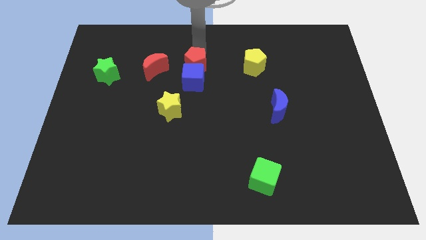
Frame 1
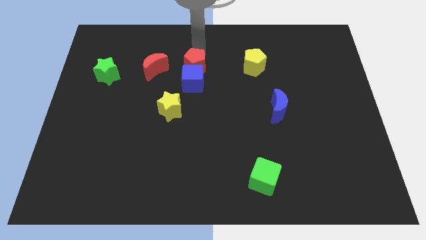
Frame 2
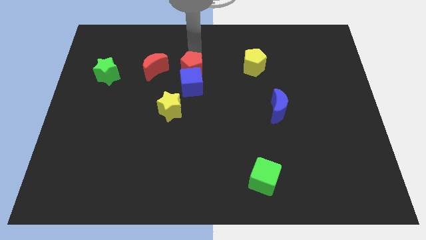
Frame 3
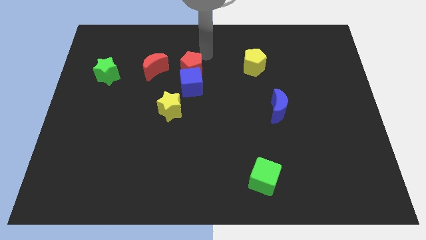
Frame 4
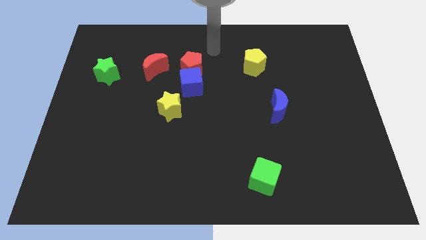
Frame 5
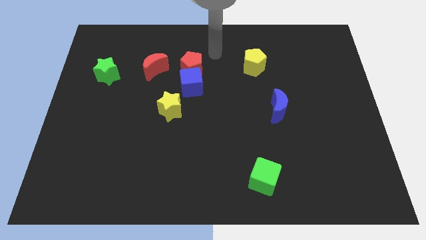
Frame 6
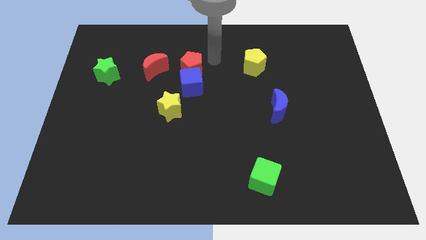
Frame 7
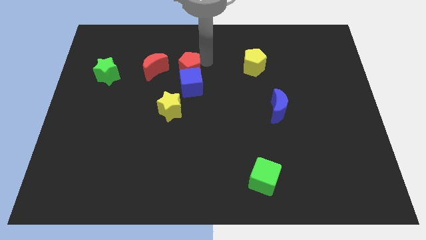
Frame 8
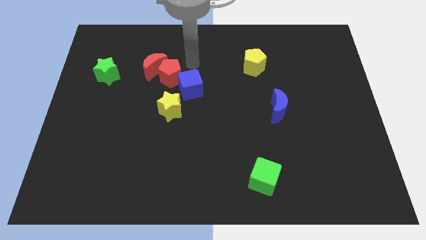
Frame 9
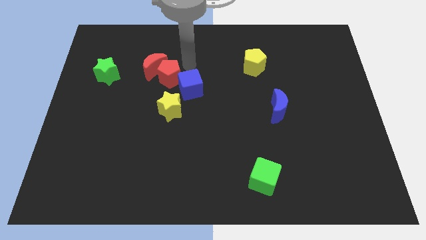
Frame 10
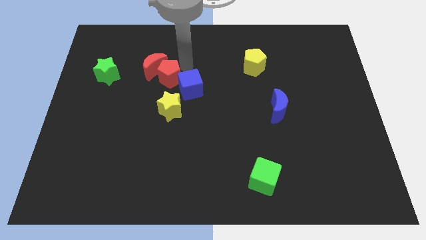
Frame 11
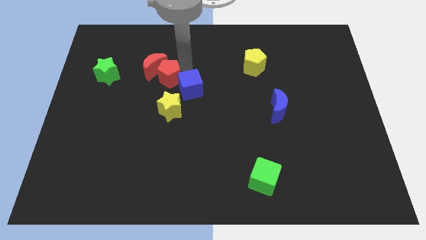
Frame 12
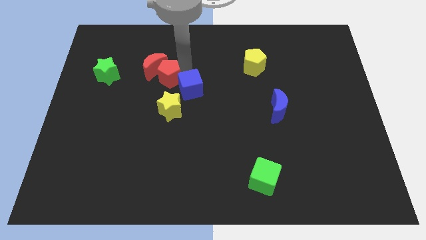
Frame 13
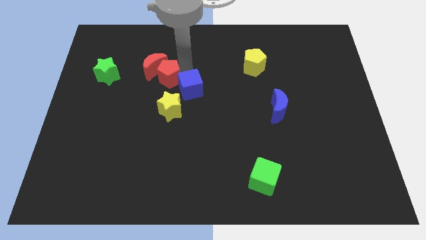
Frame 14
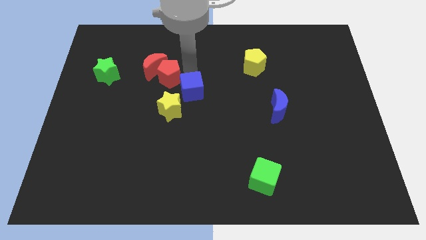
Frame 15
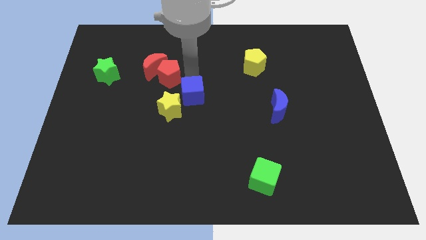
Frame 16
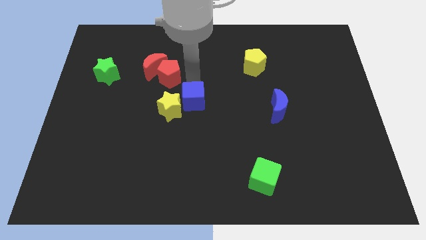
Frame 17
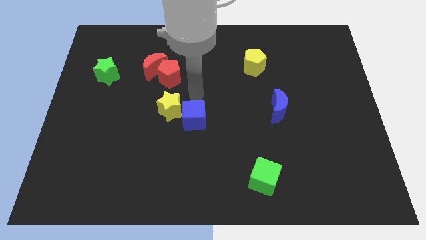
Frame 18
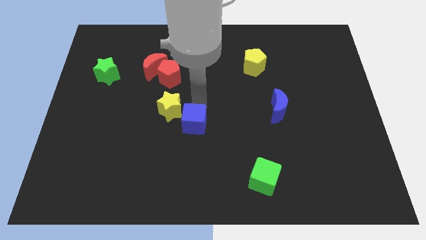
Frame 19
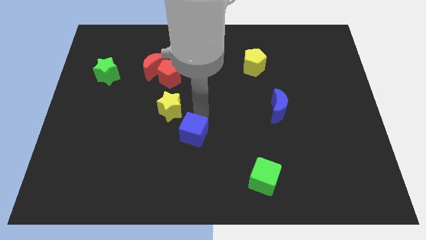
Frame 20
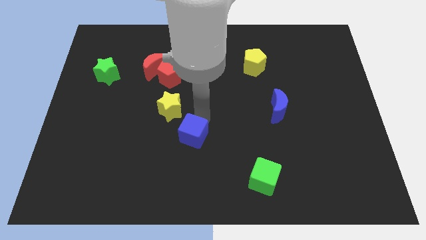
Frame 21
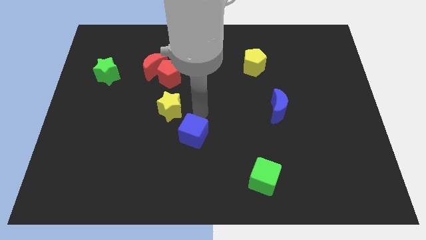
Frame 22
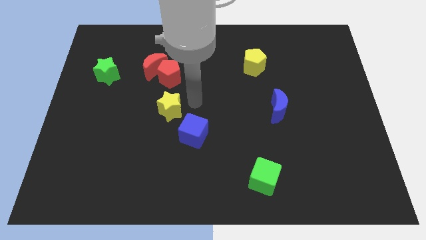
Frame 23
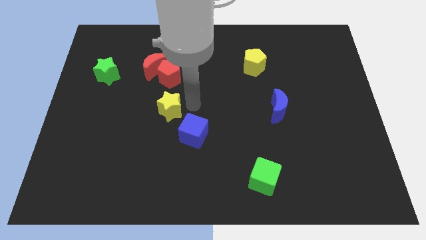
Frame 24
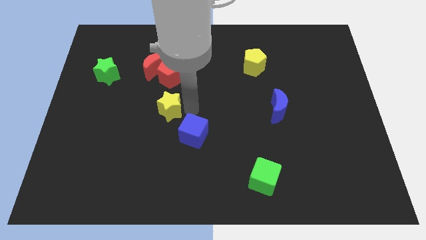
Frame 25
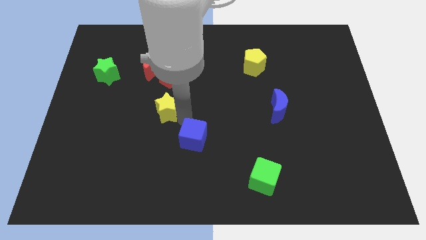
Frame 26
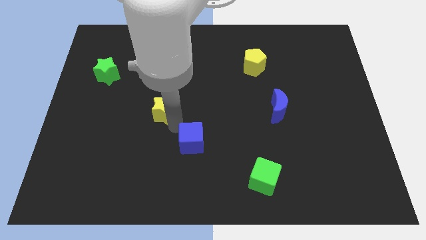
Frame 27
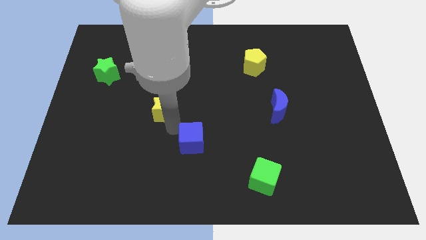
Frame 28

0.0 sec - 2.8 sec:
place the arm between the yellow star and blue cube

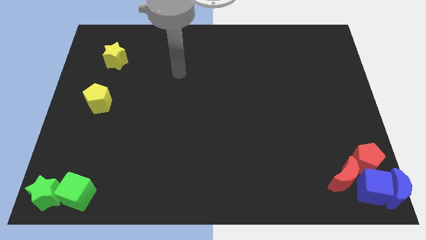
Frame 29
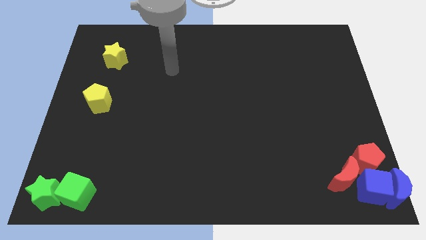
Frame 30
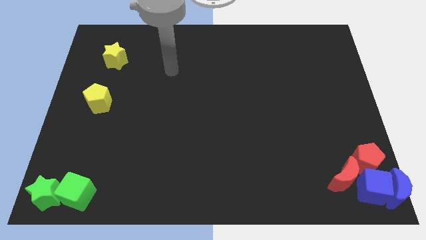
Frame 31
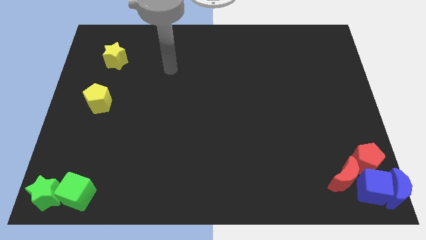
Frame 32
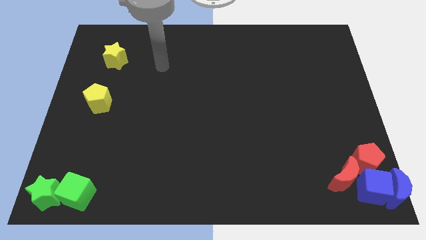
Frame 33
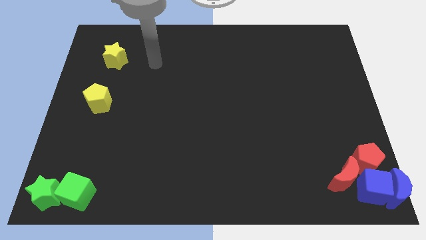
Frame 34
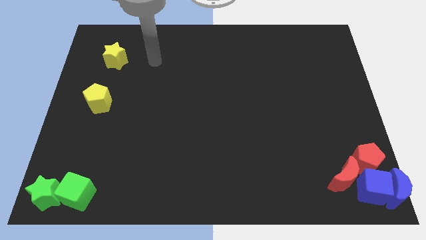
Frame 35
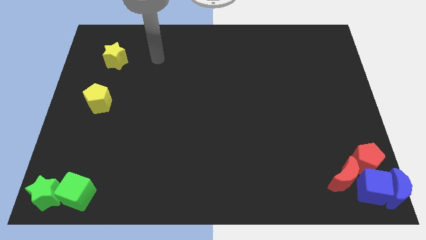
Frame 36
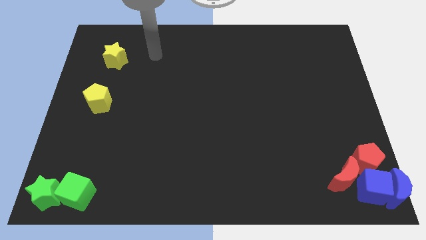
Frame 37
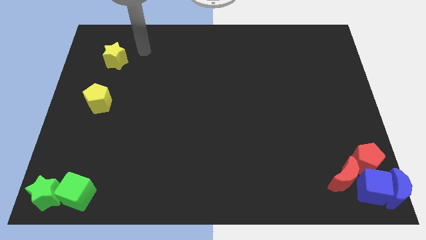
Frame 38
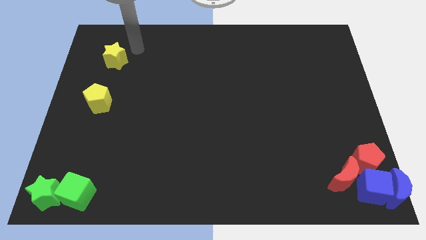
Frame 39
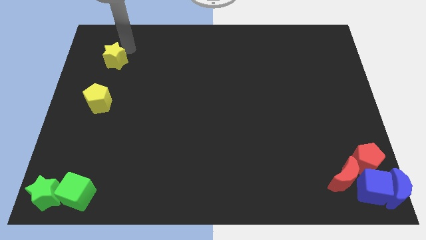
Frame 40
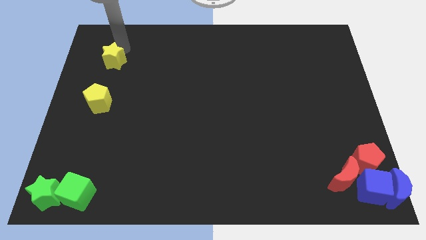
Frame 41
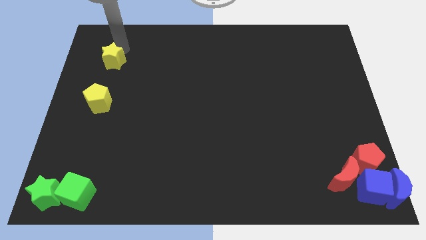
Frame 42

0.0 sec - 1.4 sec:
touch the yellow star

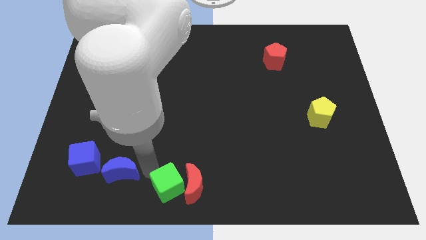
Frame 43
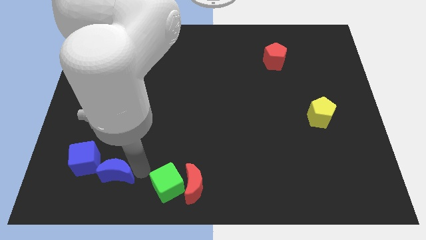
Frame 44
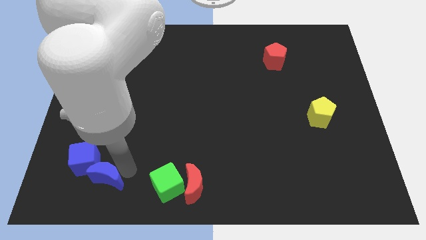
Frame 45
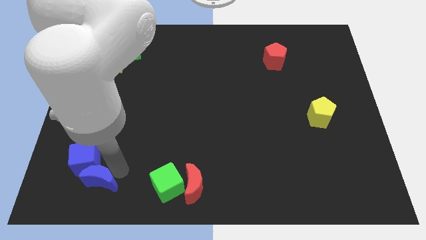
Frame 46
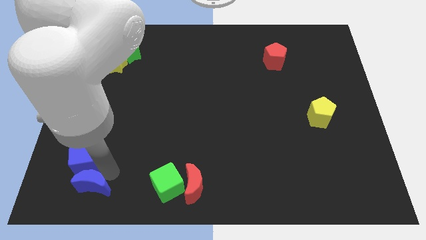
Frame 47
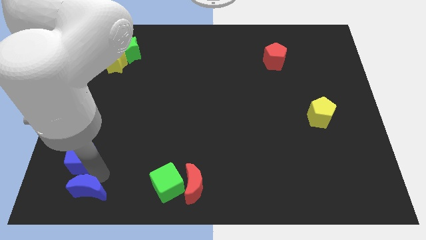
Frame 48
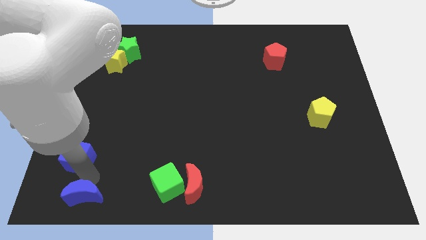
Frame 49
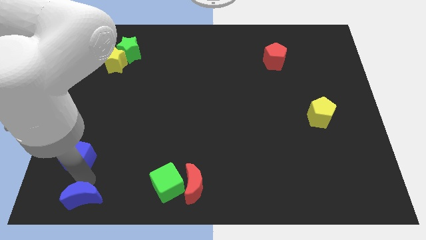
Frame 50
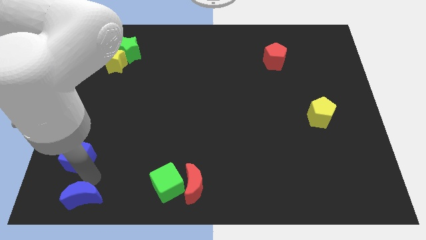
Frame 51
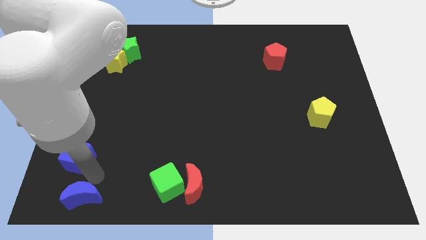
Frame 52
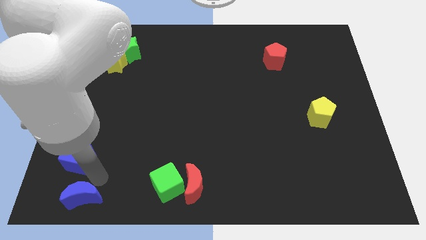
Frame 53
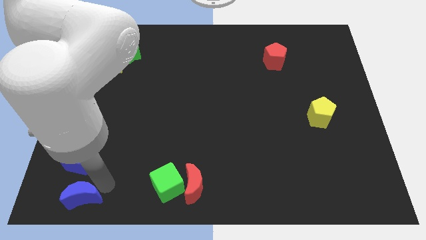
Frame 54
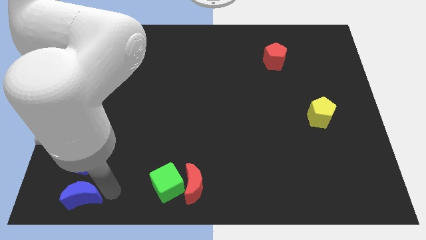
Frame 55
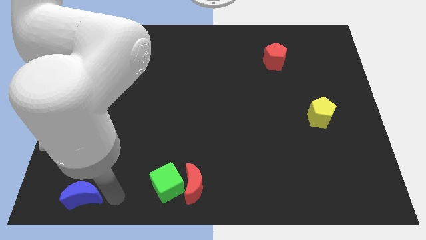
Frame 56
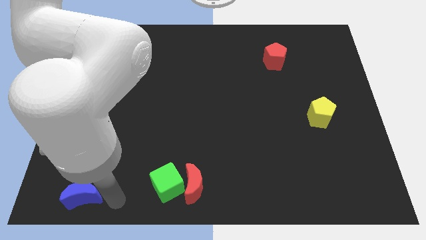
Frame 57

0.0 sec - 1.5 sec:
move the blue moon below the blue cube

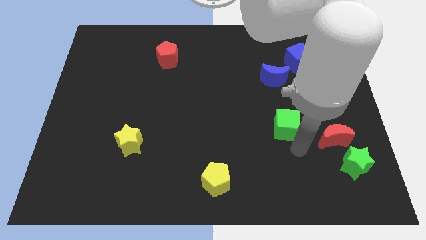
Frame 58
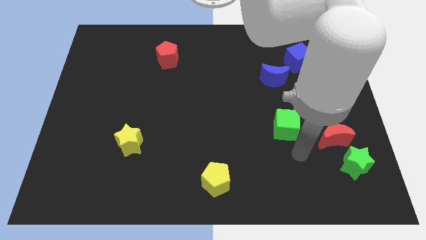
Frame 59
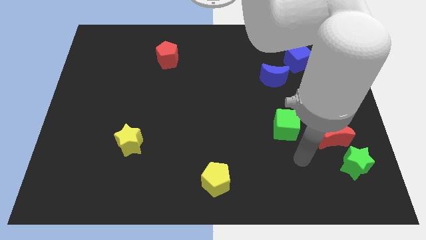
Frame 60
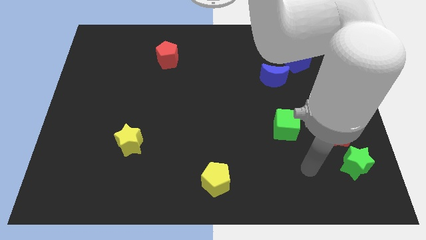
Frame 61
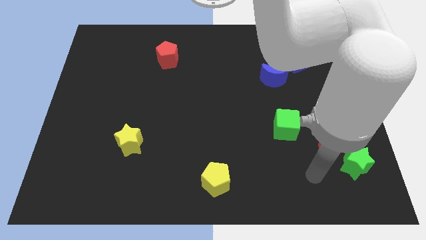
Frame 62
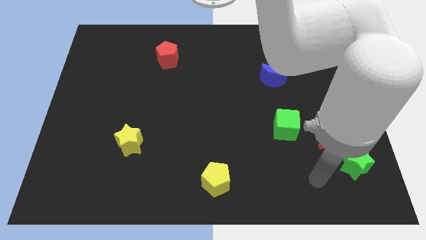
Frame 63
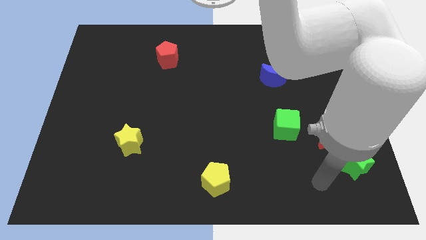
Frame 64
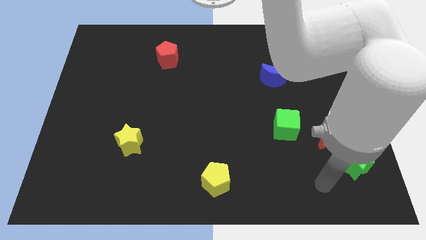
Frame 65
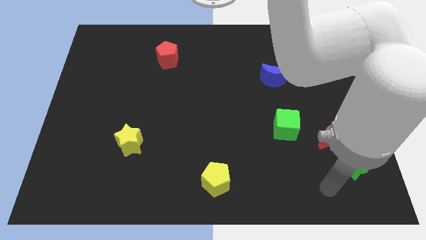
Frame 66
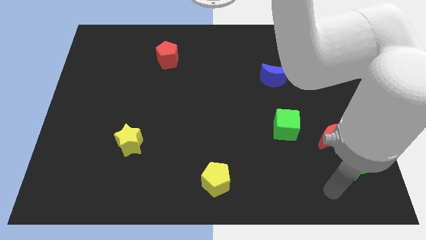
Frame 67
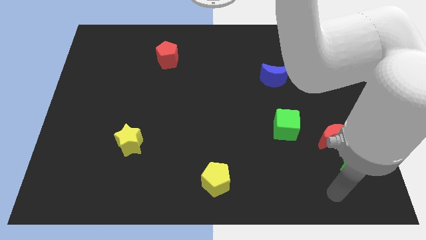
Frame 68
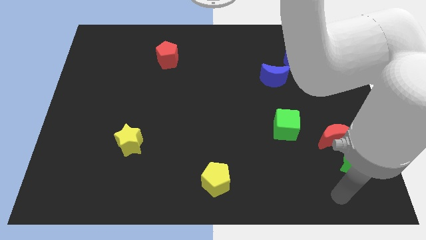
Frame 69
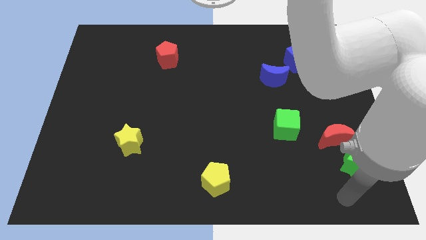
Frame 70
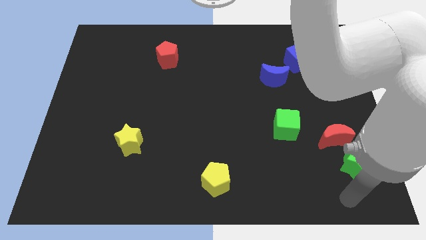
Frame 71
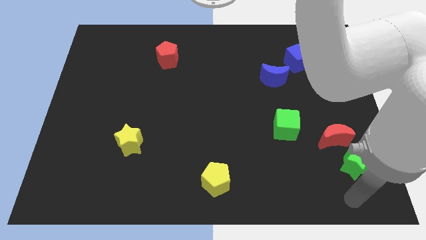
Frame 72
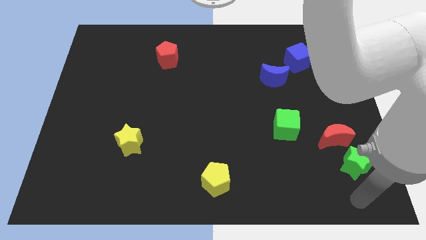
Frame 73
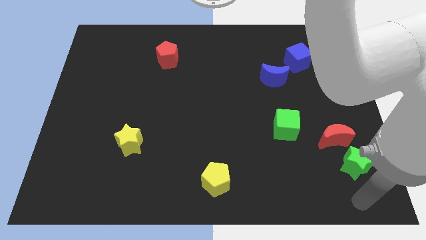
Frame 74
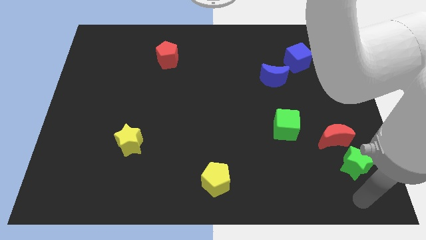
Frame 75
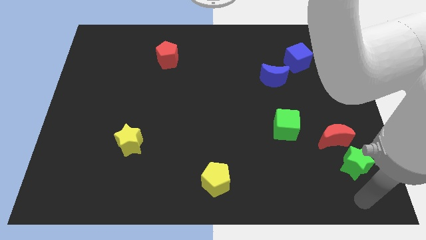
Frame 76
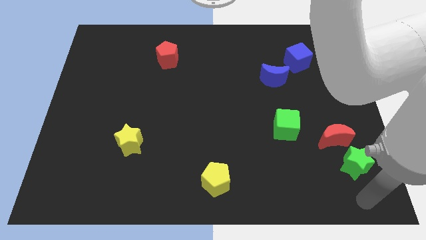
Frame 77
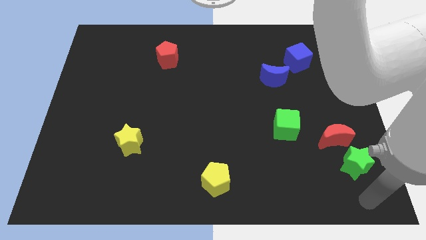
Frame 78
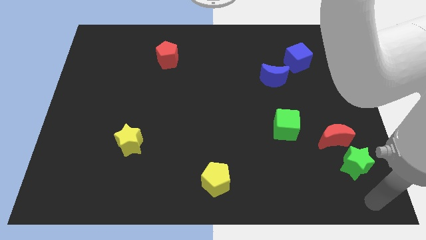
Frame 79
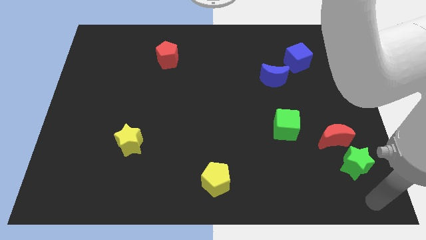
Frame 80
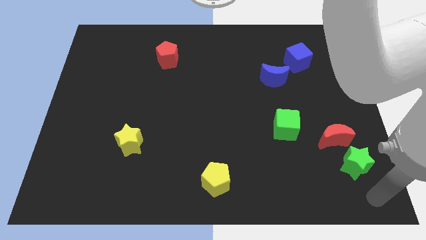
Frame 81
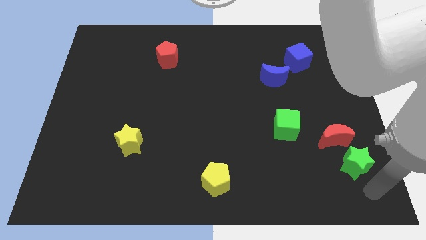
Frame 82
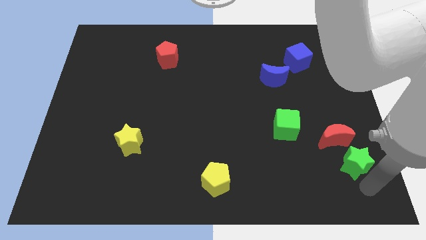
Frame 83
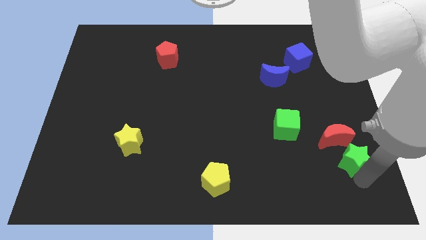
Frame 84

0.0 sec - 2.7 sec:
move green star to the bottom of red crescent

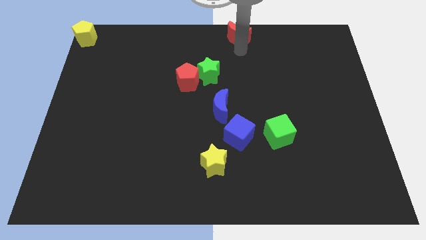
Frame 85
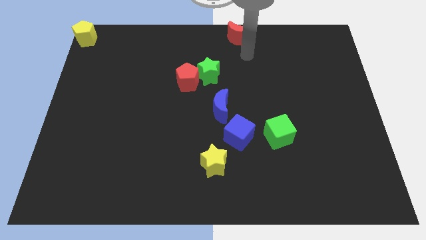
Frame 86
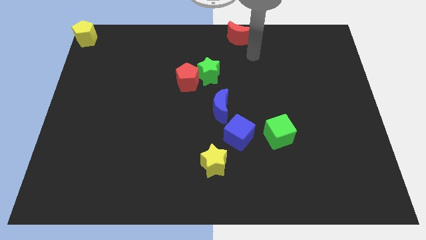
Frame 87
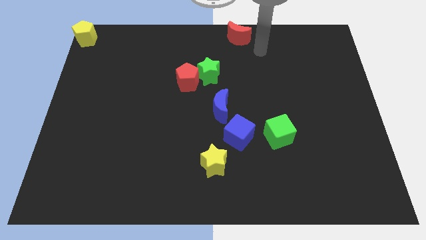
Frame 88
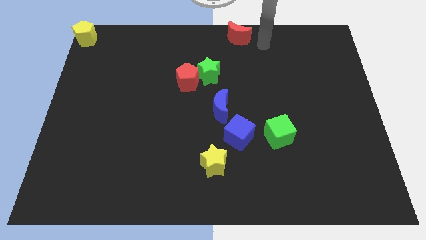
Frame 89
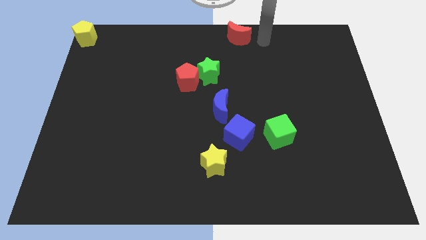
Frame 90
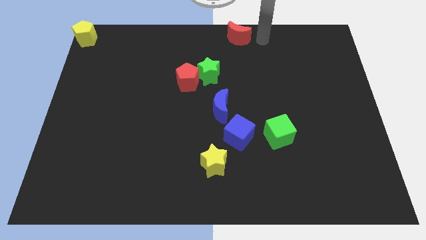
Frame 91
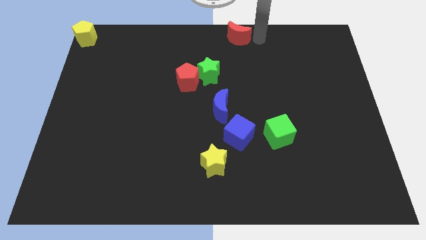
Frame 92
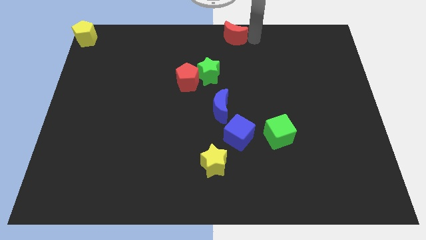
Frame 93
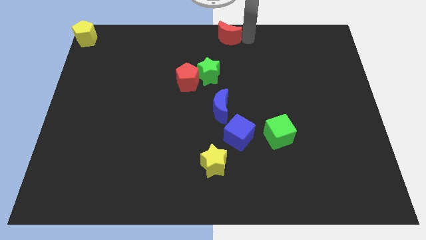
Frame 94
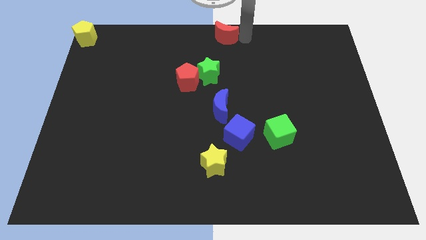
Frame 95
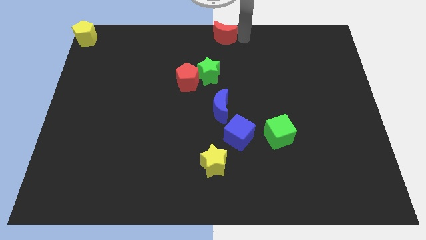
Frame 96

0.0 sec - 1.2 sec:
push the red crescent to the top center of the board
